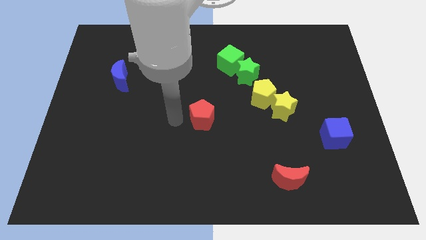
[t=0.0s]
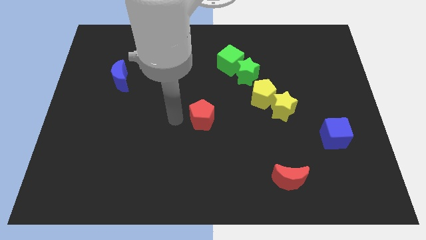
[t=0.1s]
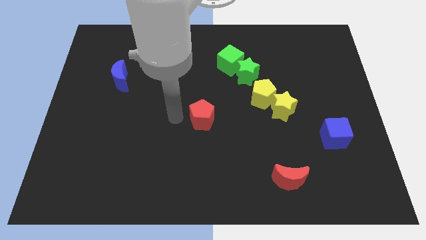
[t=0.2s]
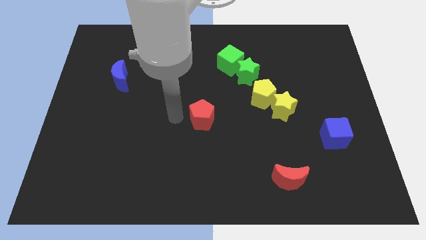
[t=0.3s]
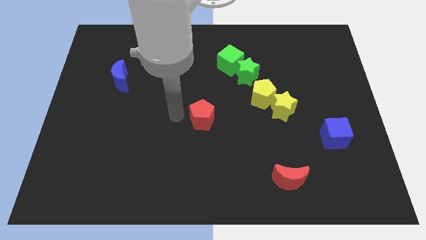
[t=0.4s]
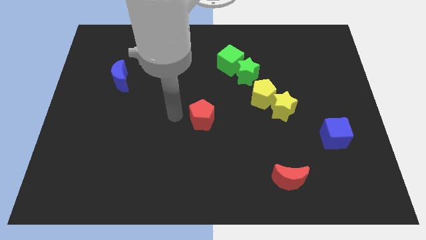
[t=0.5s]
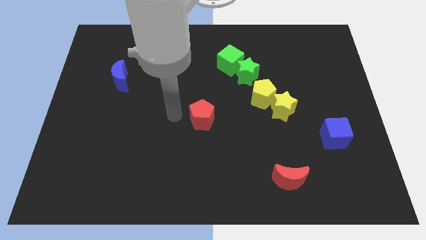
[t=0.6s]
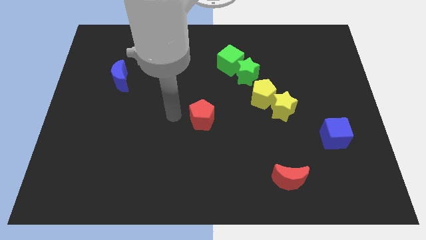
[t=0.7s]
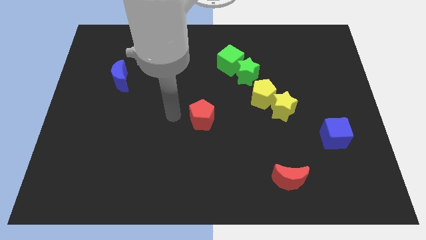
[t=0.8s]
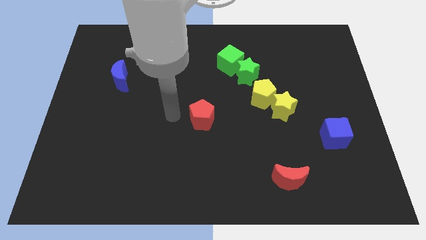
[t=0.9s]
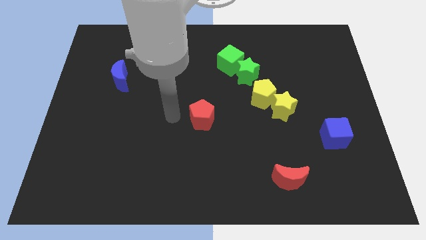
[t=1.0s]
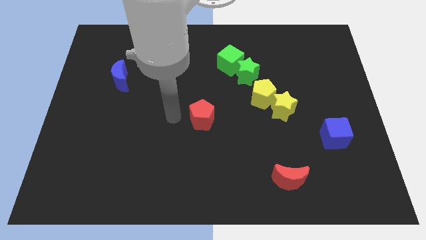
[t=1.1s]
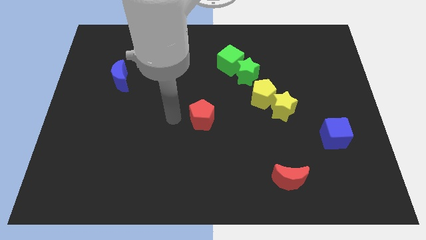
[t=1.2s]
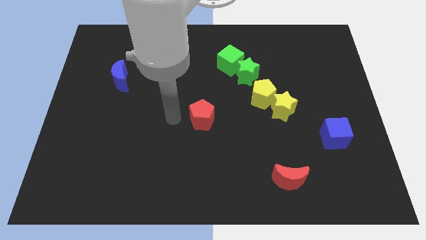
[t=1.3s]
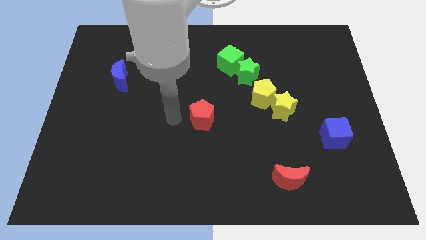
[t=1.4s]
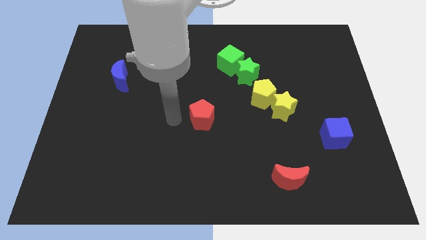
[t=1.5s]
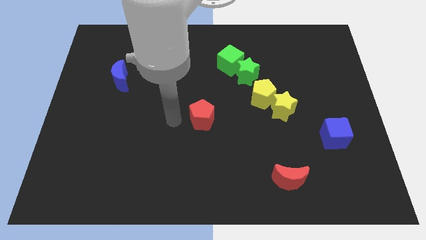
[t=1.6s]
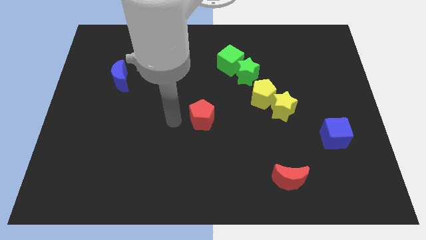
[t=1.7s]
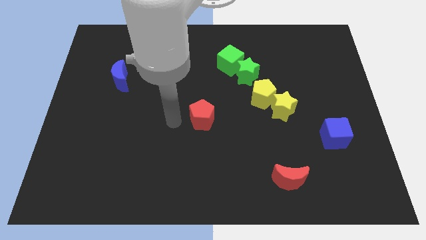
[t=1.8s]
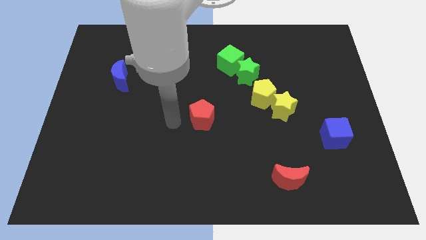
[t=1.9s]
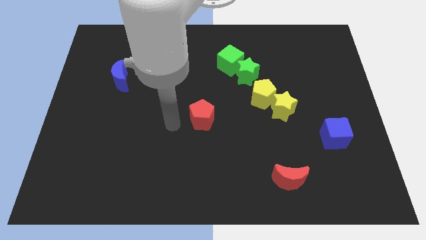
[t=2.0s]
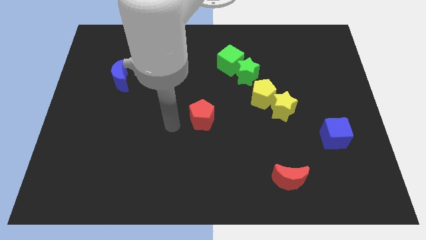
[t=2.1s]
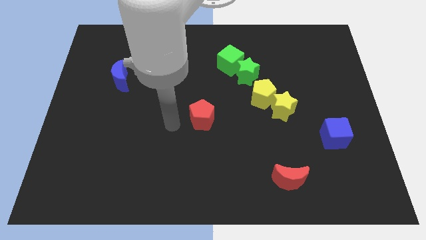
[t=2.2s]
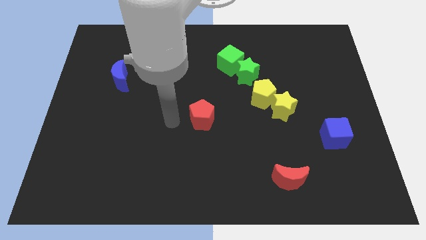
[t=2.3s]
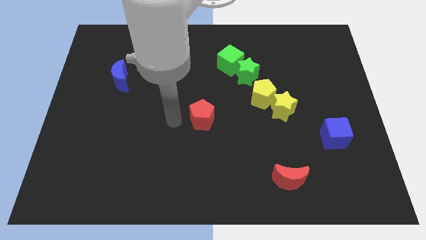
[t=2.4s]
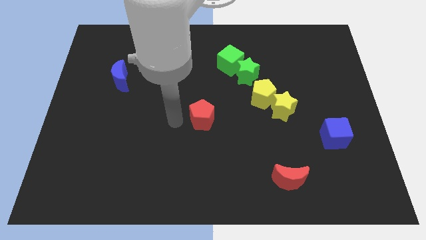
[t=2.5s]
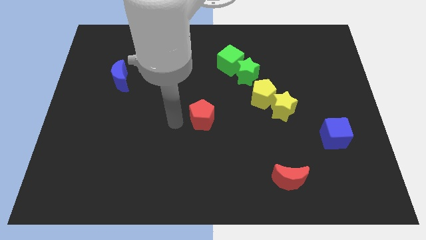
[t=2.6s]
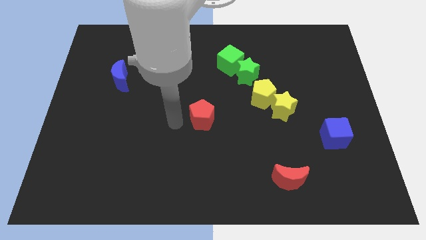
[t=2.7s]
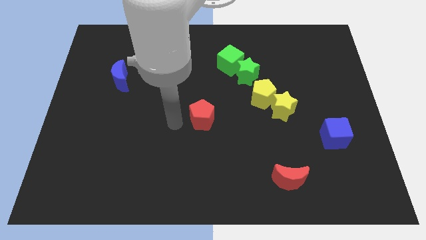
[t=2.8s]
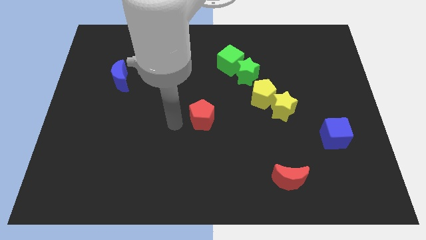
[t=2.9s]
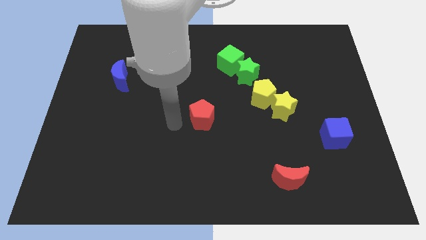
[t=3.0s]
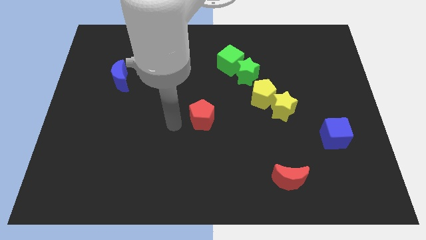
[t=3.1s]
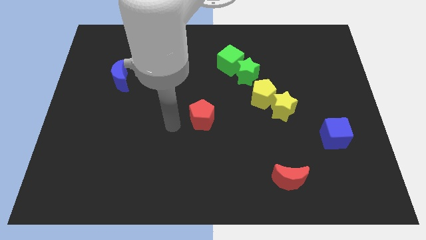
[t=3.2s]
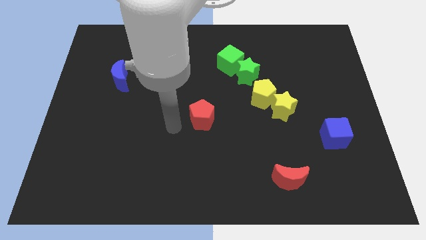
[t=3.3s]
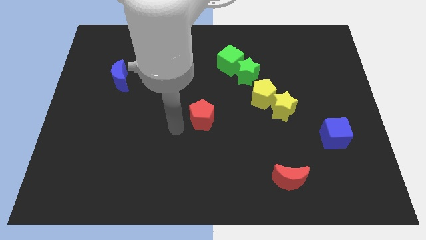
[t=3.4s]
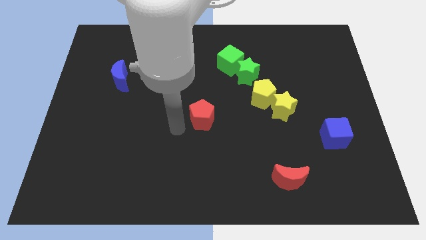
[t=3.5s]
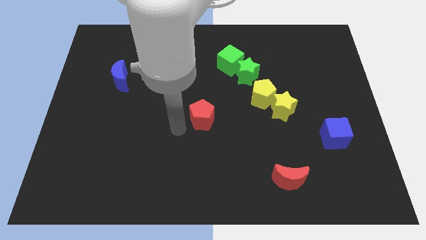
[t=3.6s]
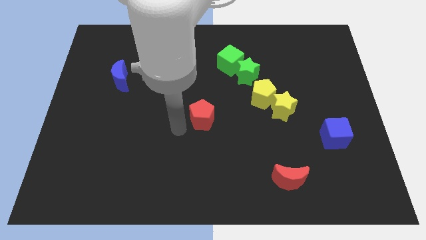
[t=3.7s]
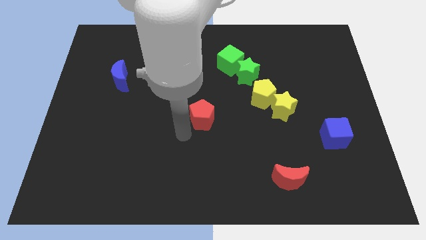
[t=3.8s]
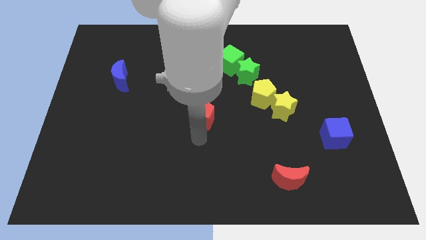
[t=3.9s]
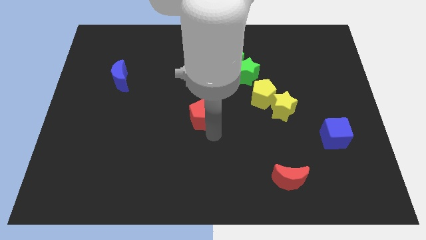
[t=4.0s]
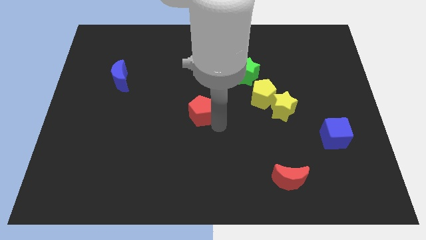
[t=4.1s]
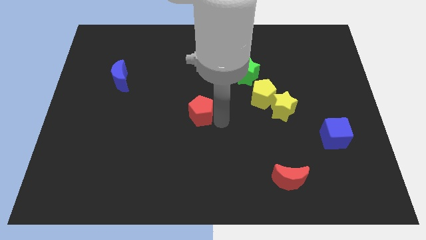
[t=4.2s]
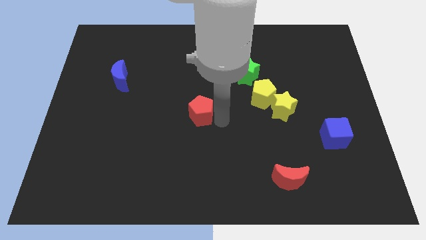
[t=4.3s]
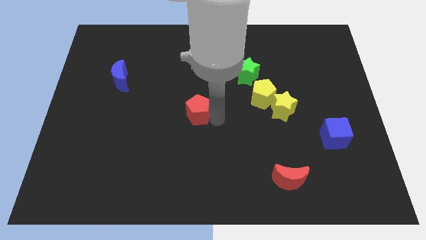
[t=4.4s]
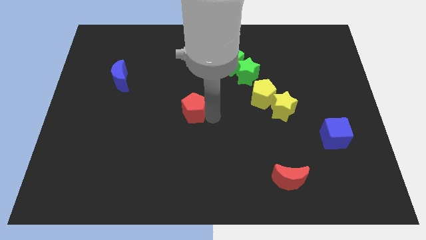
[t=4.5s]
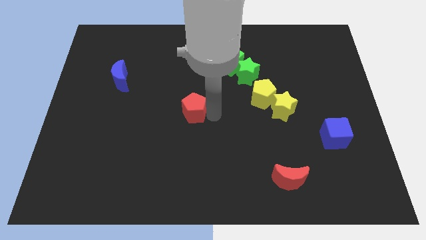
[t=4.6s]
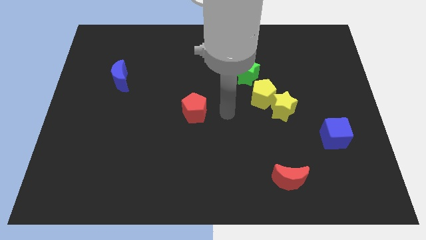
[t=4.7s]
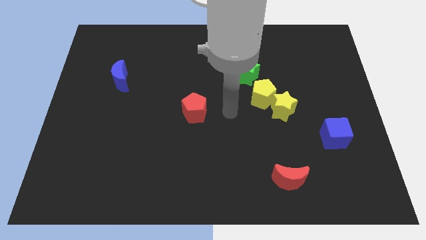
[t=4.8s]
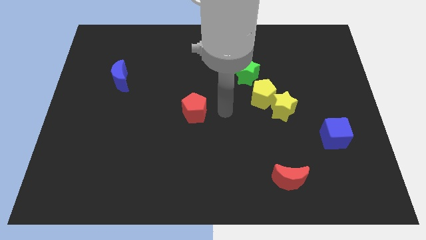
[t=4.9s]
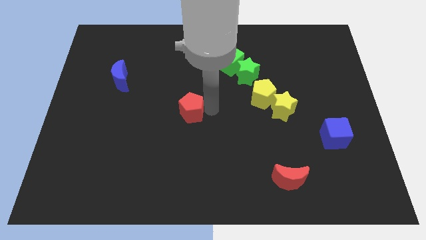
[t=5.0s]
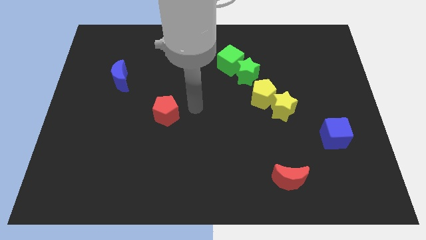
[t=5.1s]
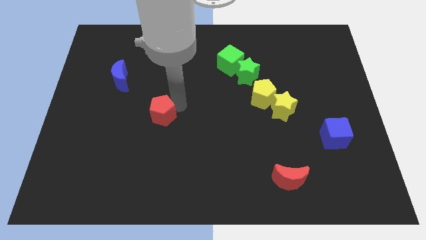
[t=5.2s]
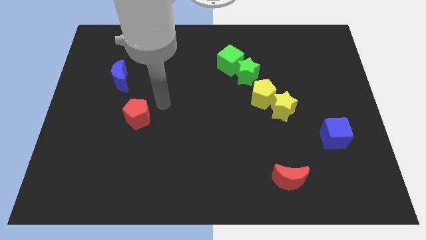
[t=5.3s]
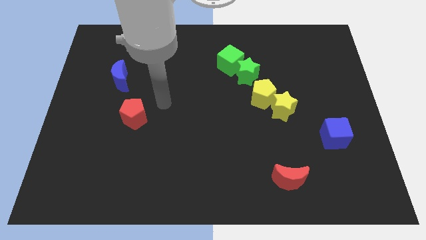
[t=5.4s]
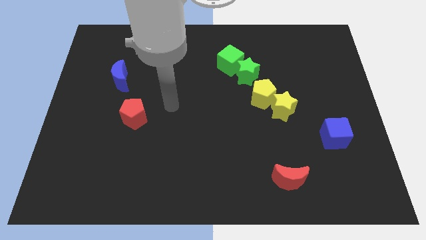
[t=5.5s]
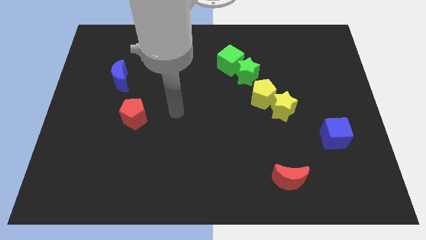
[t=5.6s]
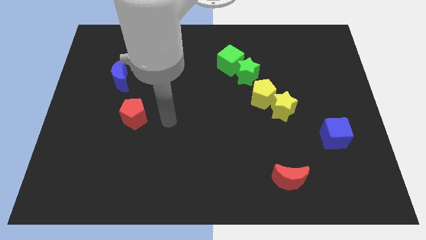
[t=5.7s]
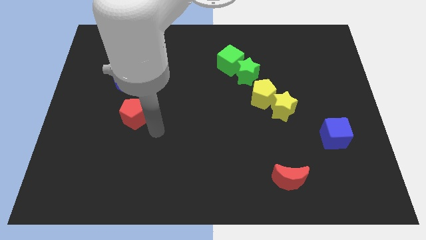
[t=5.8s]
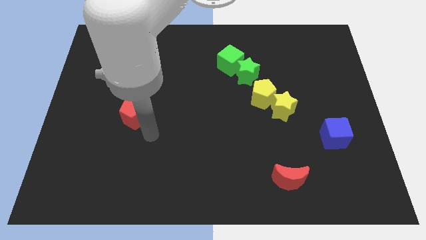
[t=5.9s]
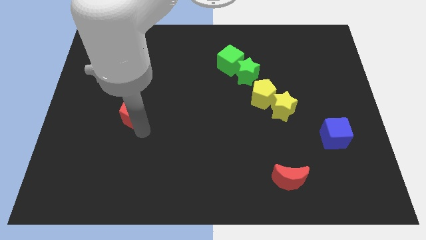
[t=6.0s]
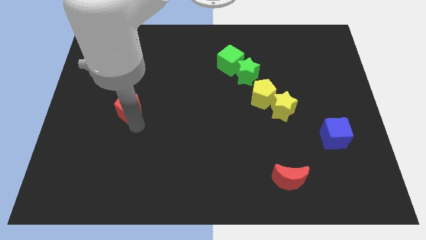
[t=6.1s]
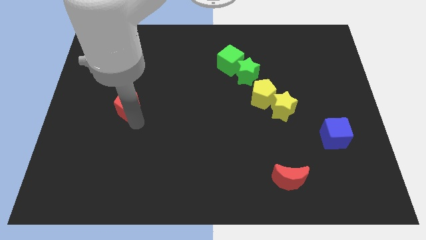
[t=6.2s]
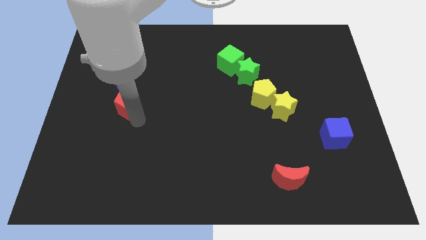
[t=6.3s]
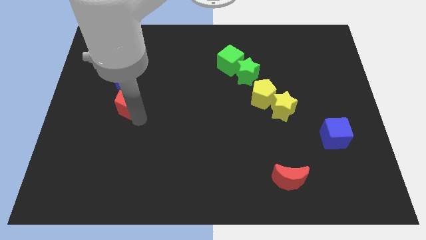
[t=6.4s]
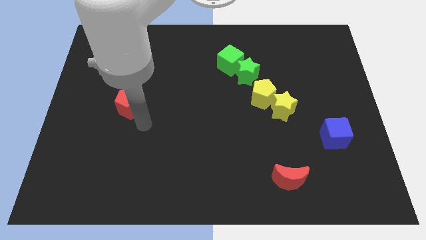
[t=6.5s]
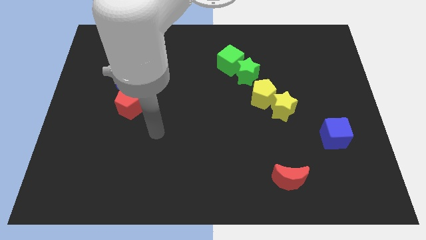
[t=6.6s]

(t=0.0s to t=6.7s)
put the red pentagon below the blue moon

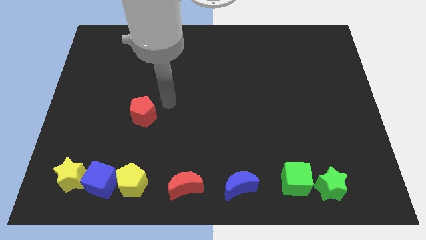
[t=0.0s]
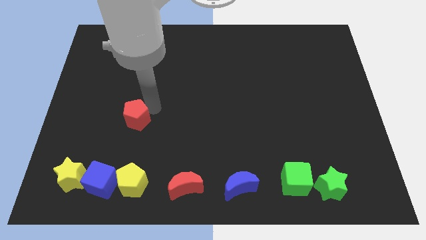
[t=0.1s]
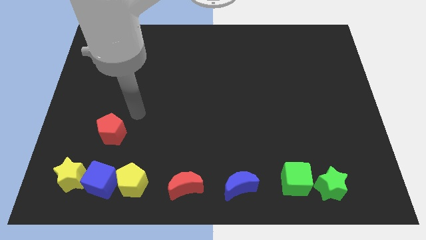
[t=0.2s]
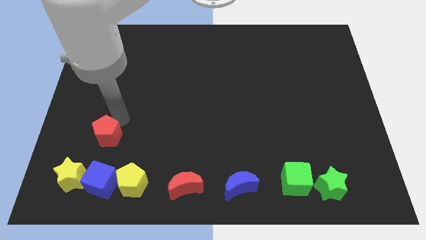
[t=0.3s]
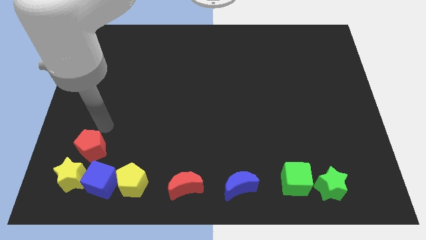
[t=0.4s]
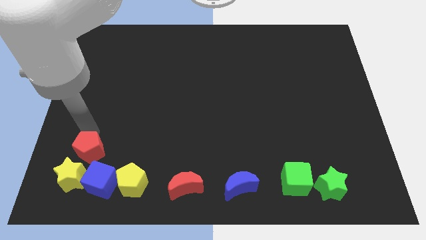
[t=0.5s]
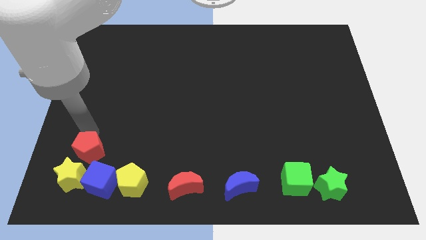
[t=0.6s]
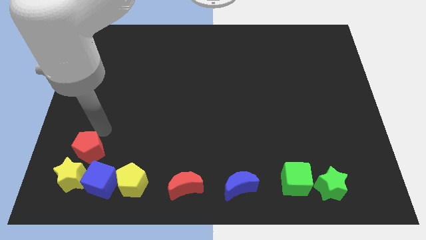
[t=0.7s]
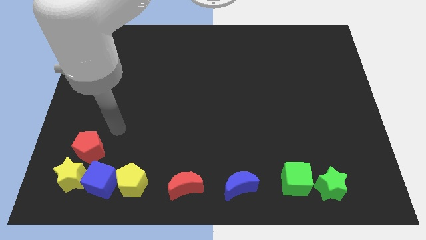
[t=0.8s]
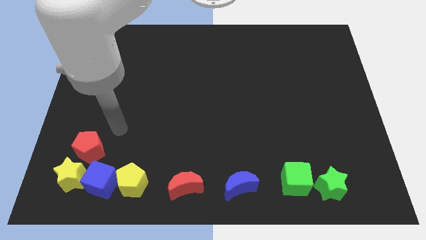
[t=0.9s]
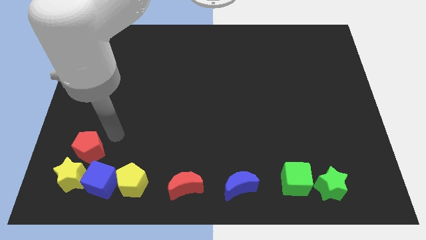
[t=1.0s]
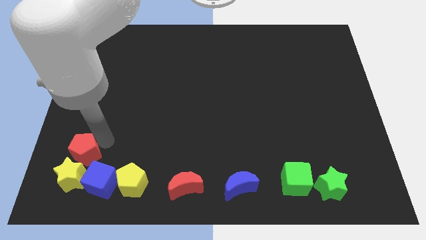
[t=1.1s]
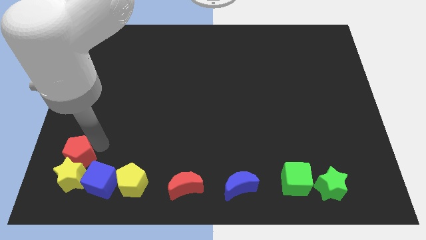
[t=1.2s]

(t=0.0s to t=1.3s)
place the red pentagon diagonally top left to the blue cube

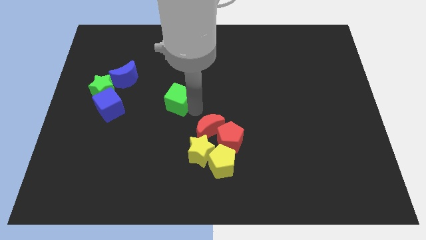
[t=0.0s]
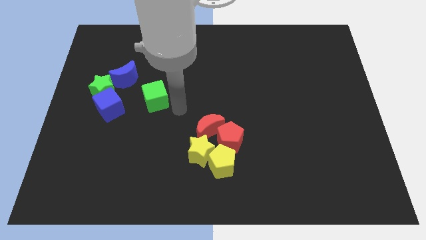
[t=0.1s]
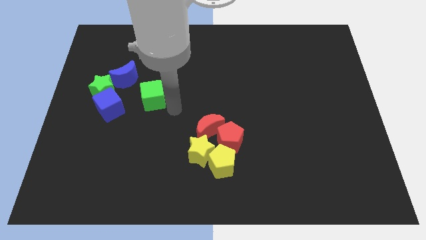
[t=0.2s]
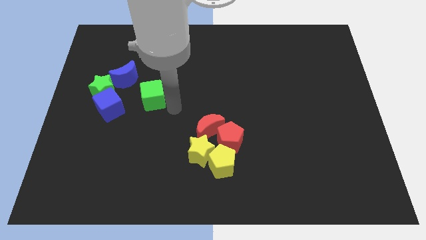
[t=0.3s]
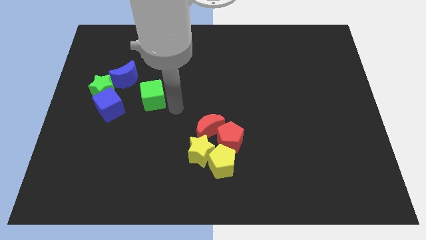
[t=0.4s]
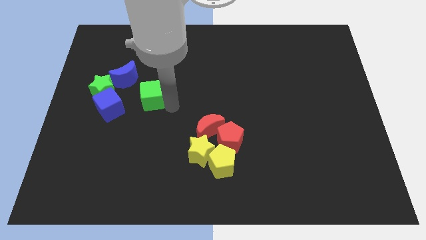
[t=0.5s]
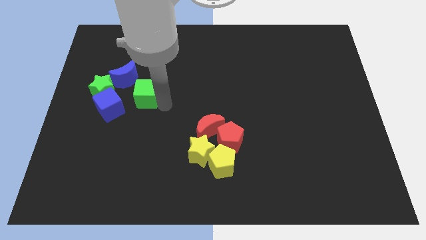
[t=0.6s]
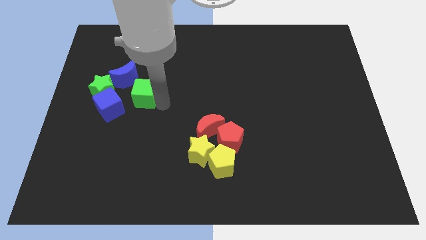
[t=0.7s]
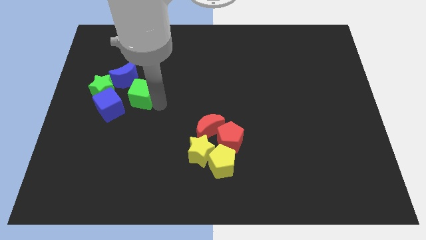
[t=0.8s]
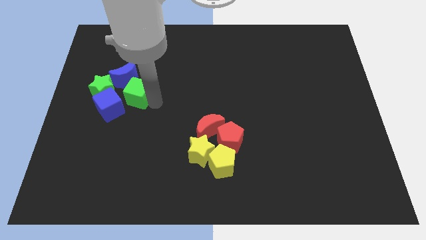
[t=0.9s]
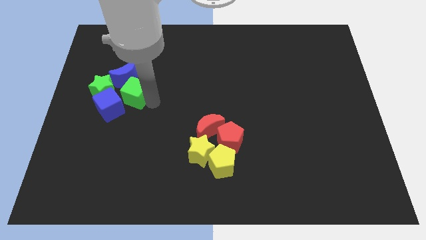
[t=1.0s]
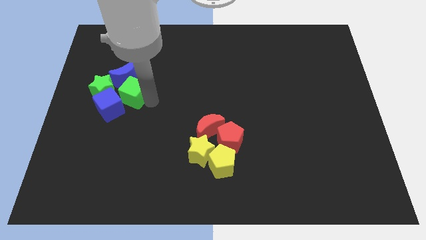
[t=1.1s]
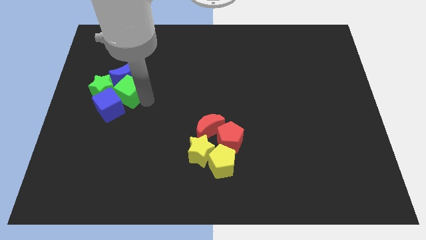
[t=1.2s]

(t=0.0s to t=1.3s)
move the green cube towards the green star
